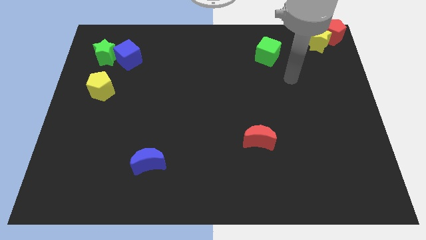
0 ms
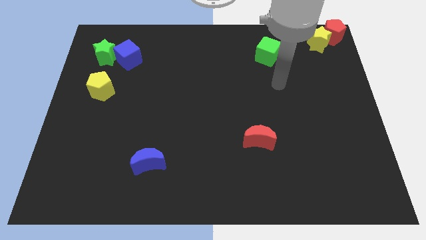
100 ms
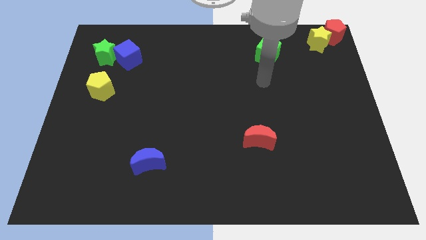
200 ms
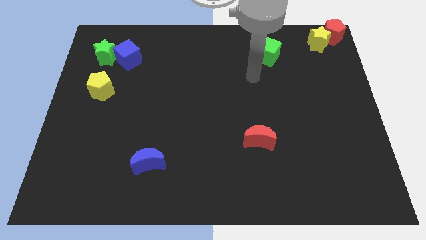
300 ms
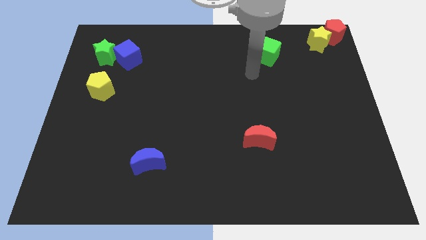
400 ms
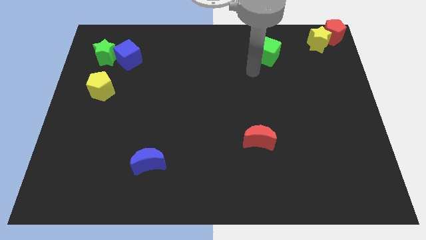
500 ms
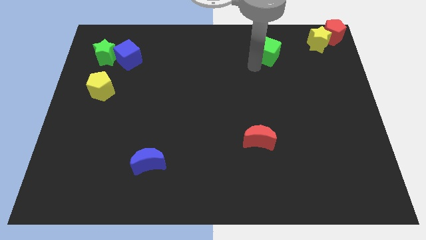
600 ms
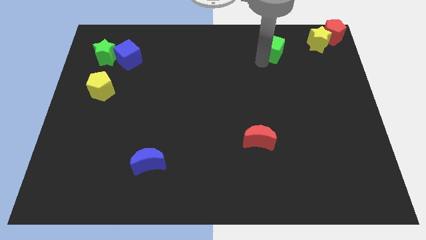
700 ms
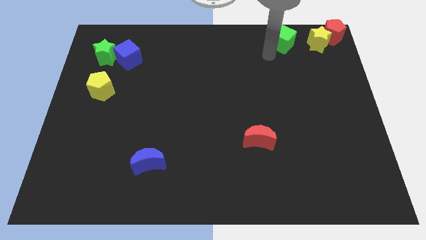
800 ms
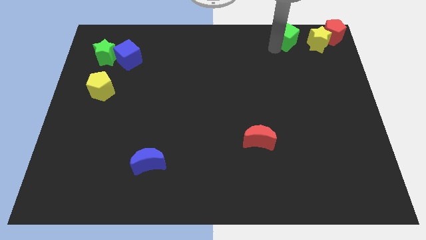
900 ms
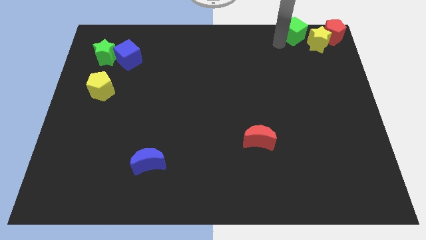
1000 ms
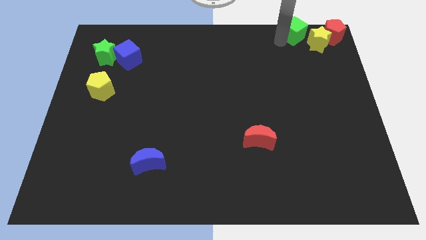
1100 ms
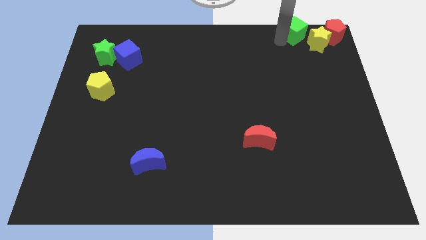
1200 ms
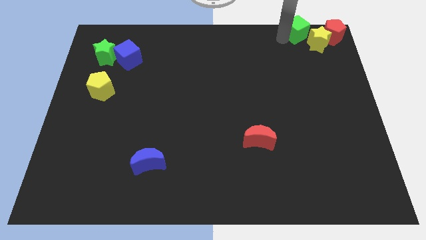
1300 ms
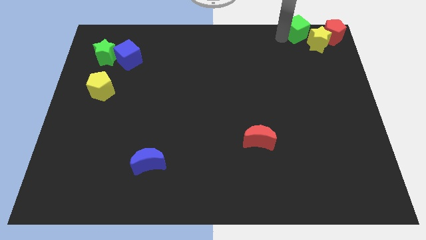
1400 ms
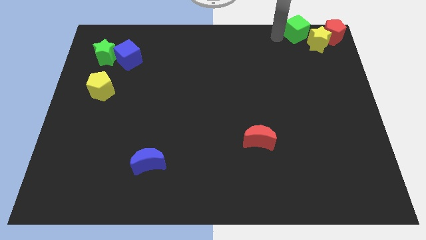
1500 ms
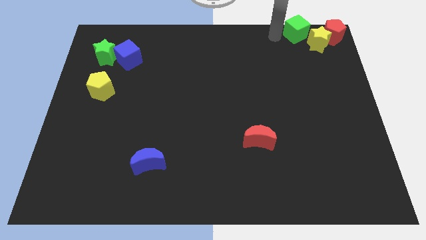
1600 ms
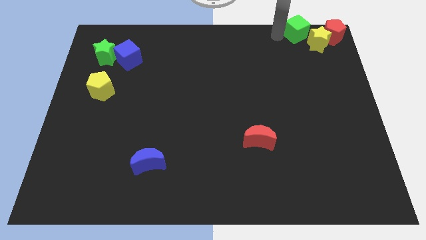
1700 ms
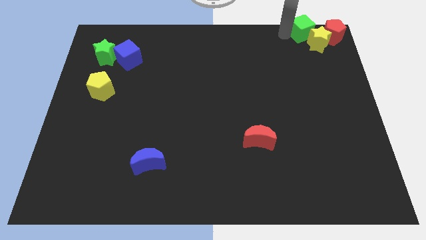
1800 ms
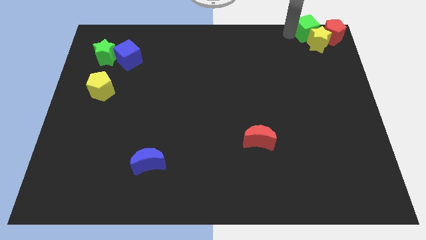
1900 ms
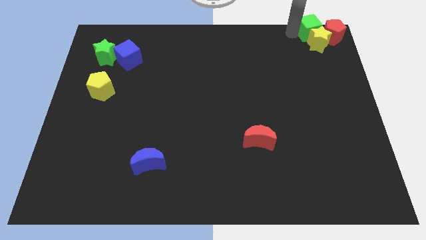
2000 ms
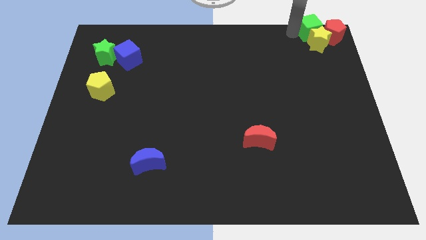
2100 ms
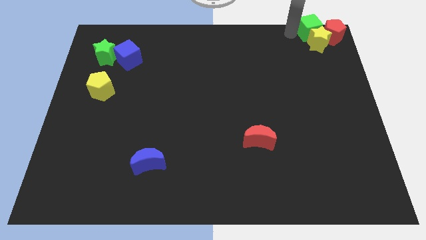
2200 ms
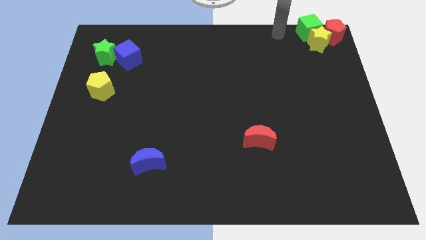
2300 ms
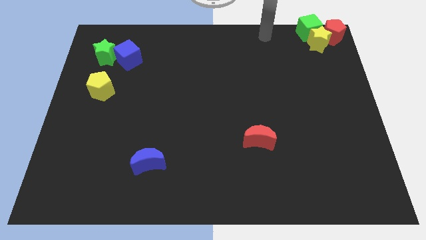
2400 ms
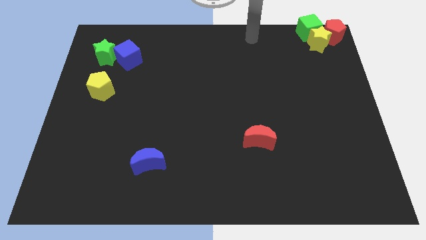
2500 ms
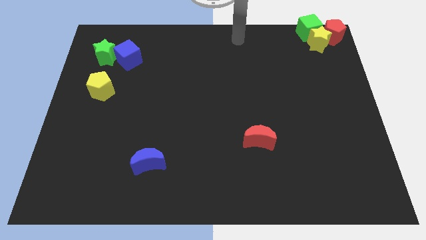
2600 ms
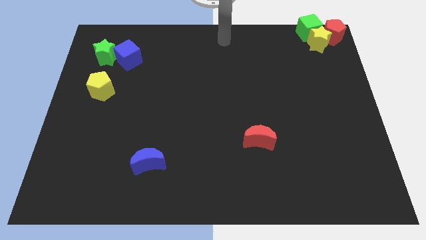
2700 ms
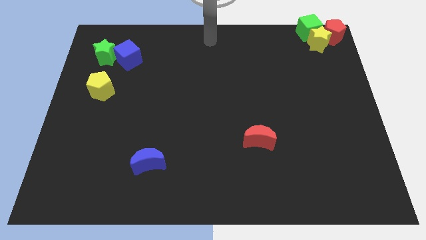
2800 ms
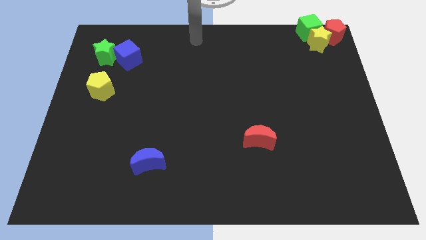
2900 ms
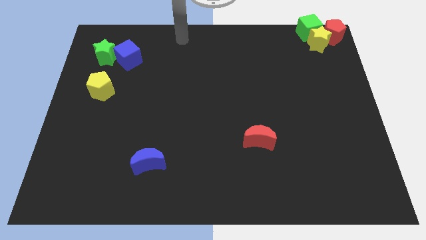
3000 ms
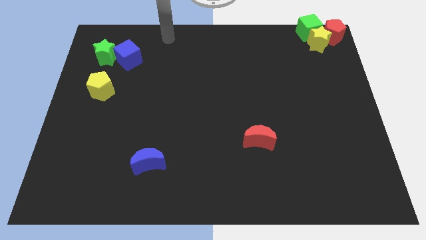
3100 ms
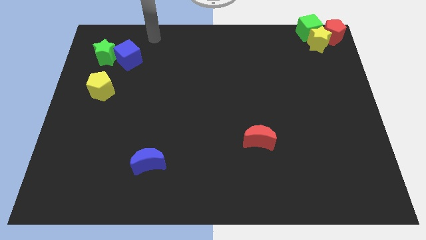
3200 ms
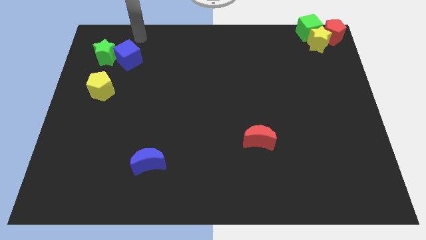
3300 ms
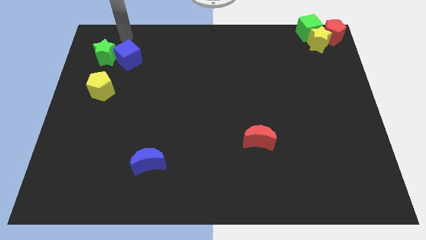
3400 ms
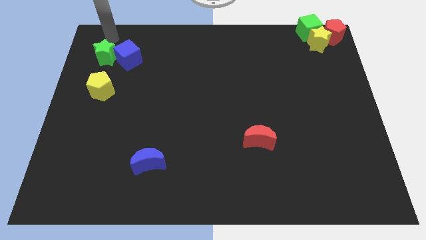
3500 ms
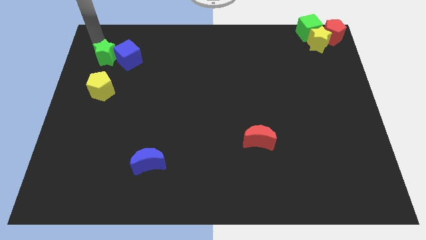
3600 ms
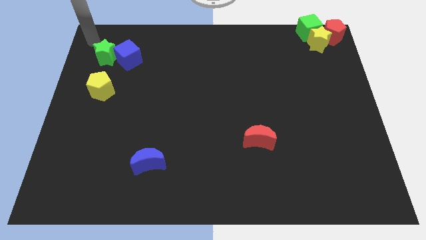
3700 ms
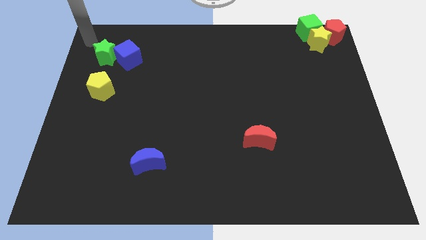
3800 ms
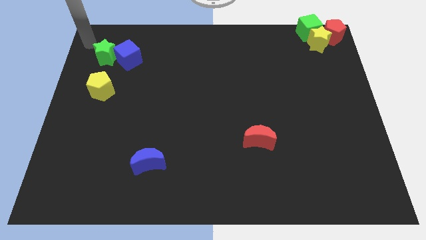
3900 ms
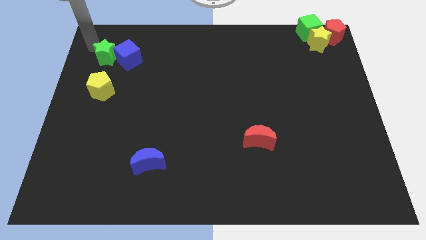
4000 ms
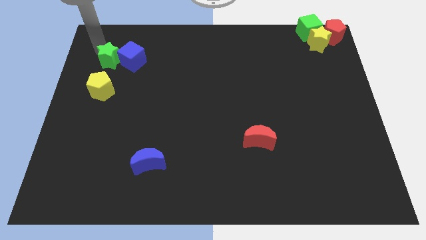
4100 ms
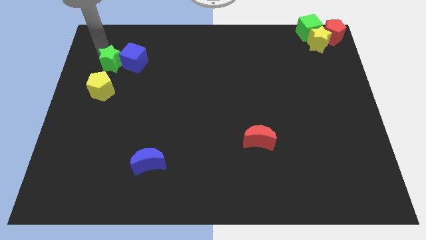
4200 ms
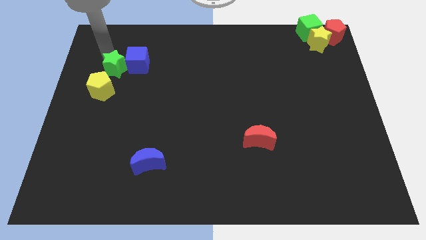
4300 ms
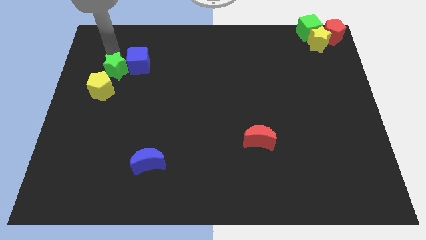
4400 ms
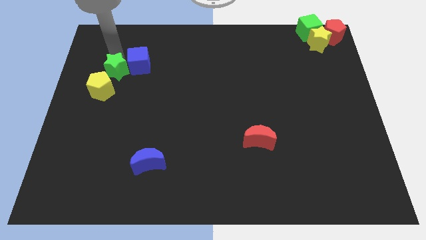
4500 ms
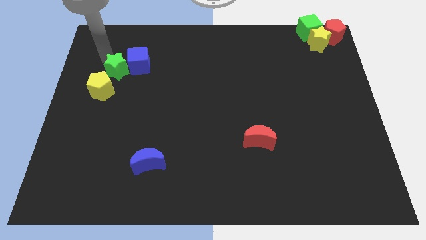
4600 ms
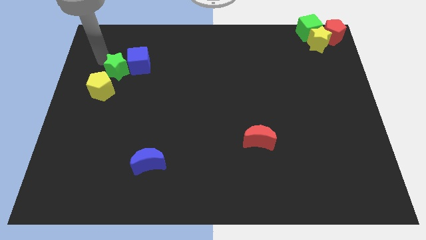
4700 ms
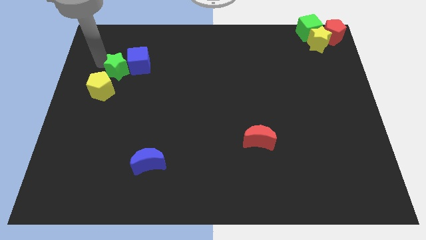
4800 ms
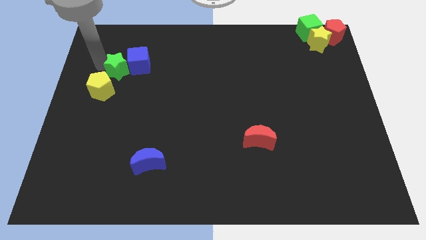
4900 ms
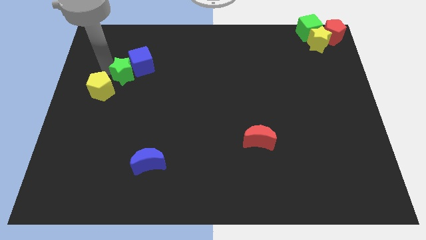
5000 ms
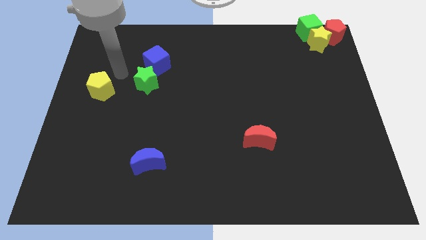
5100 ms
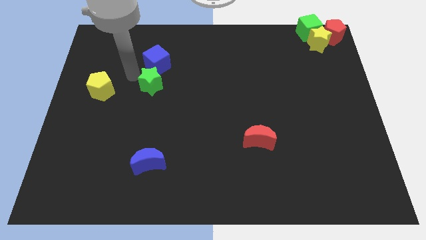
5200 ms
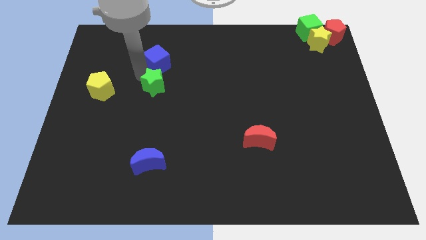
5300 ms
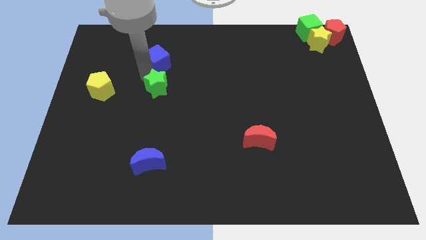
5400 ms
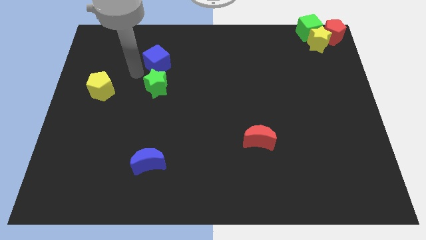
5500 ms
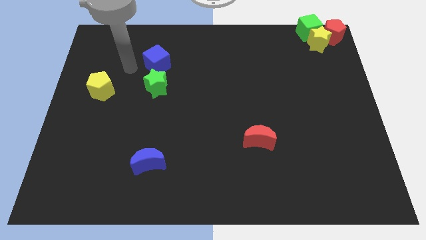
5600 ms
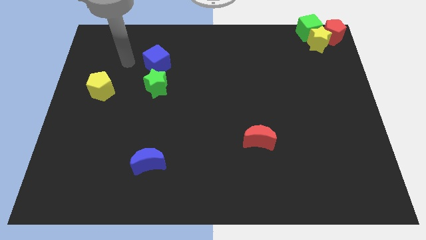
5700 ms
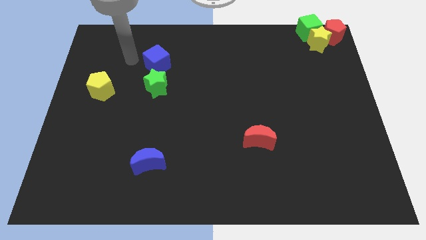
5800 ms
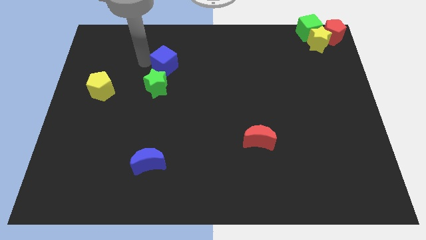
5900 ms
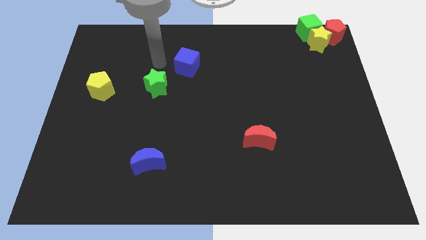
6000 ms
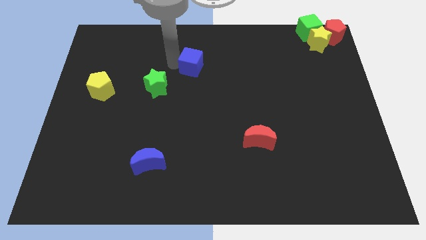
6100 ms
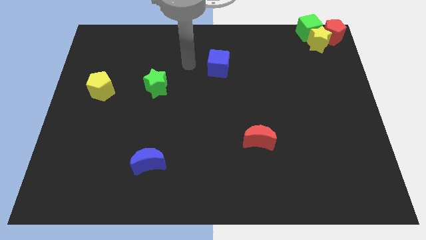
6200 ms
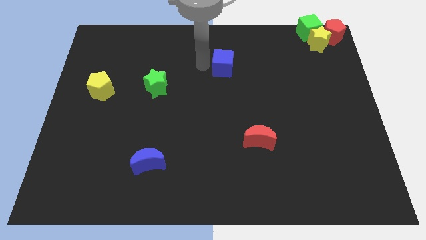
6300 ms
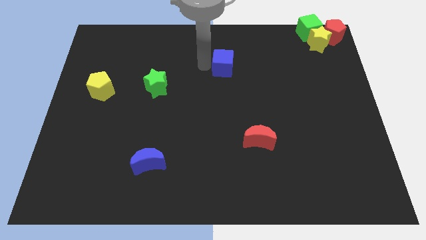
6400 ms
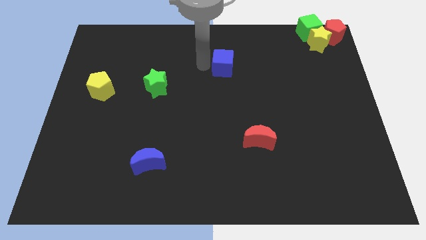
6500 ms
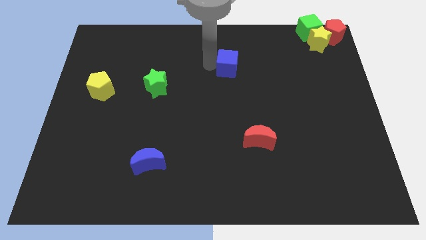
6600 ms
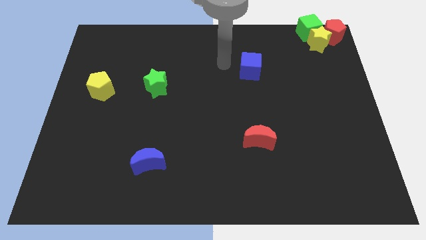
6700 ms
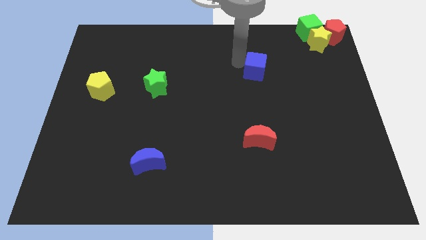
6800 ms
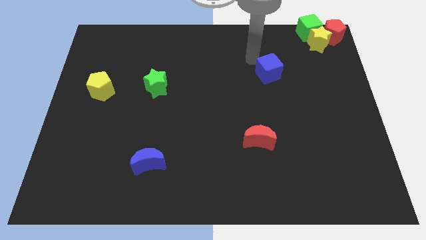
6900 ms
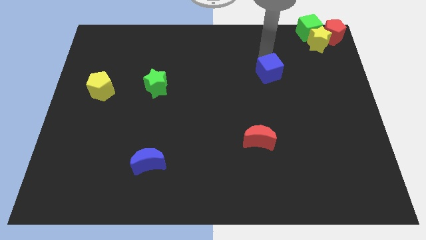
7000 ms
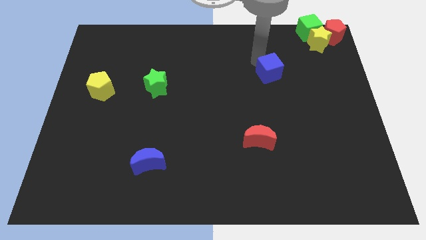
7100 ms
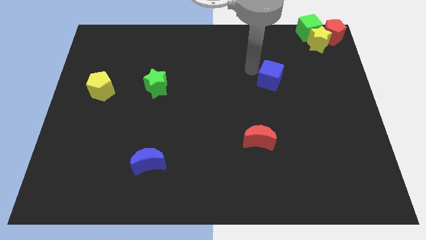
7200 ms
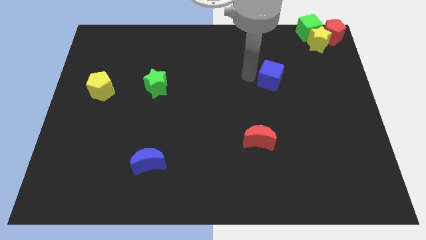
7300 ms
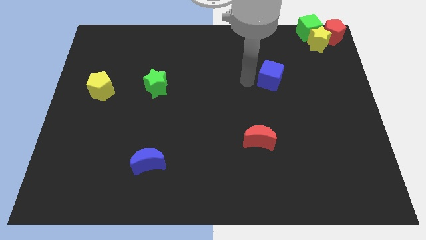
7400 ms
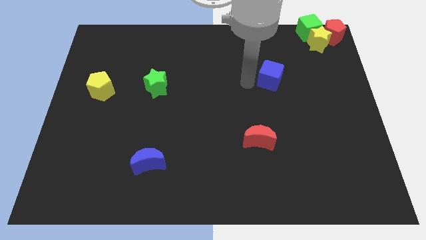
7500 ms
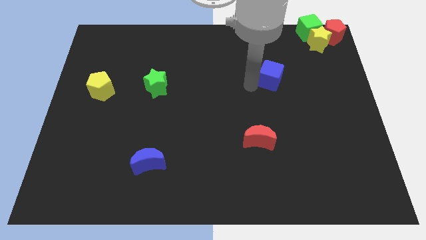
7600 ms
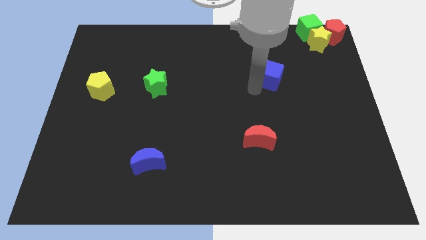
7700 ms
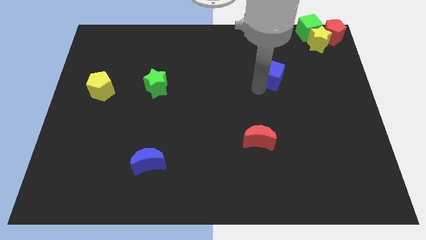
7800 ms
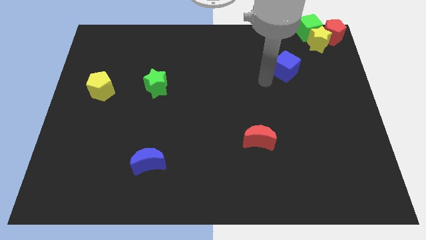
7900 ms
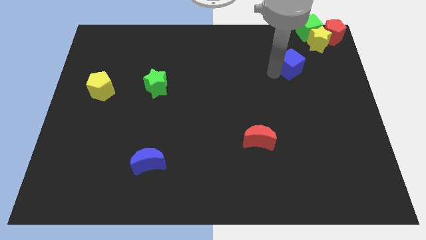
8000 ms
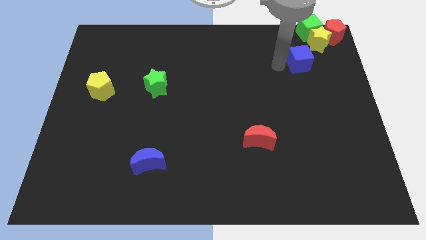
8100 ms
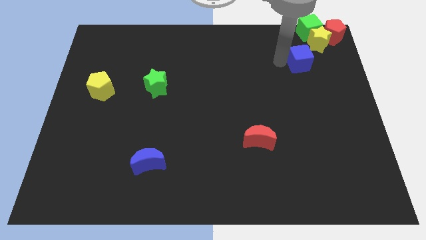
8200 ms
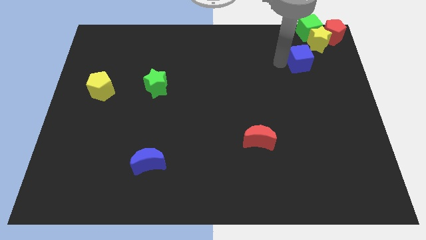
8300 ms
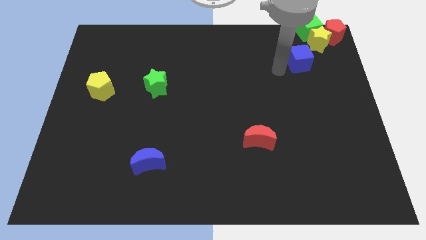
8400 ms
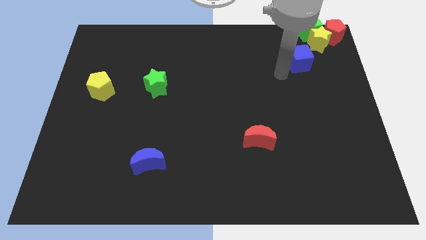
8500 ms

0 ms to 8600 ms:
move green cube and blue cube to the top right corner of the board

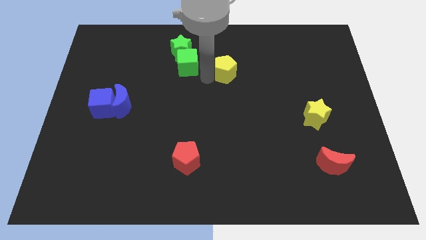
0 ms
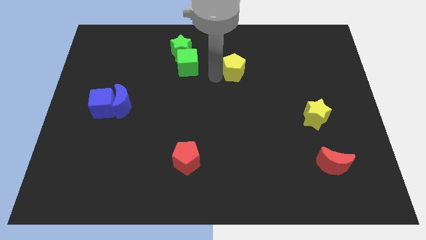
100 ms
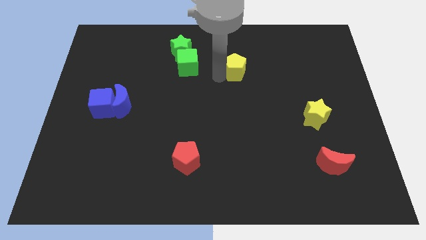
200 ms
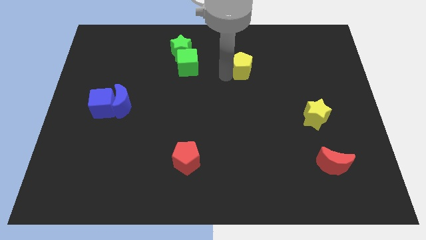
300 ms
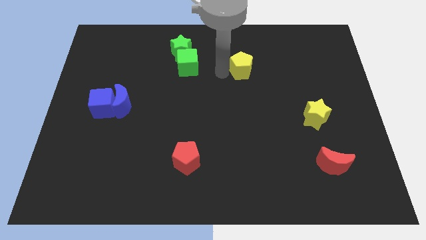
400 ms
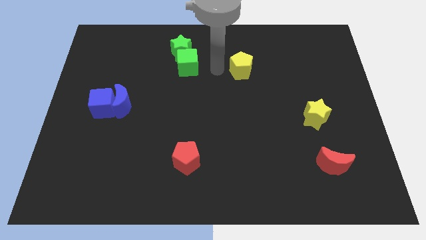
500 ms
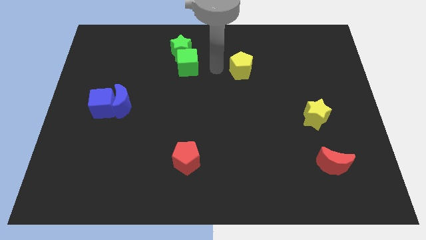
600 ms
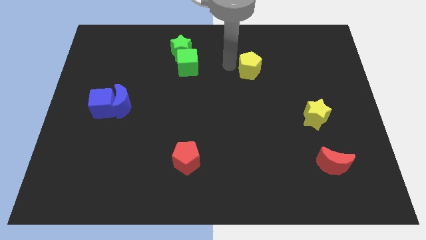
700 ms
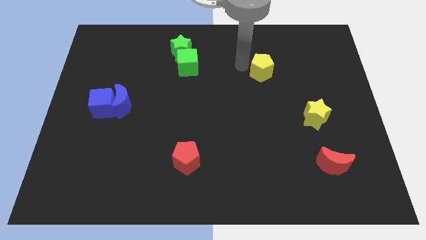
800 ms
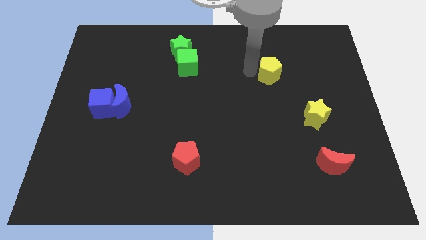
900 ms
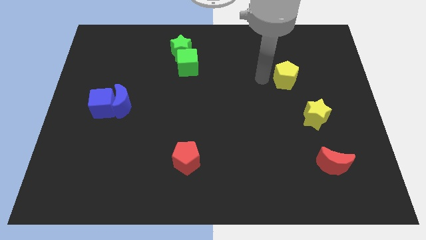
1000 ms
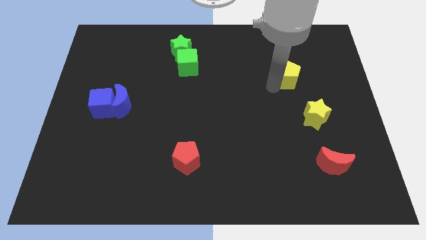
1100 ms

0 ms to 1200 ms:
separate yellow pentagon from green cube
